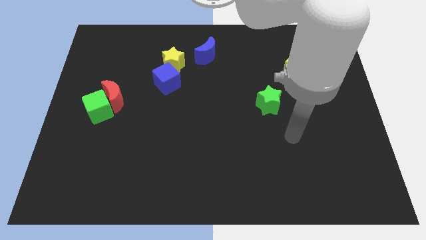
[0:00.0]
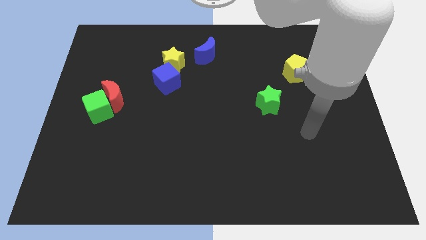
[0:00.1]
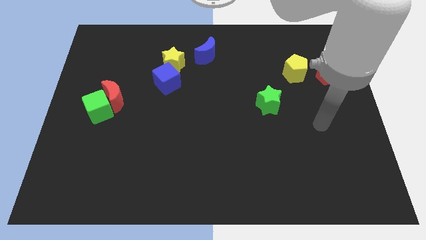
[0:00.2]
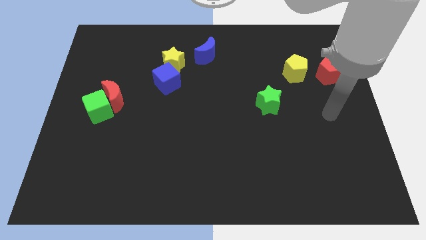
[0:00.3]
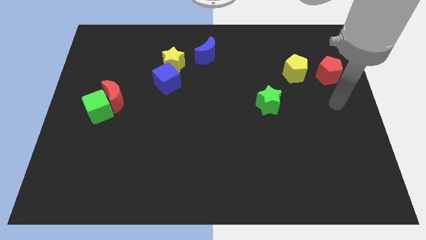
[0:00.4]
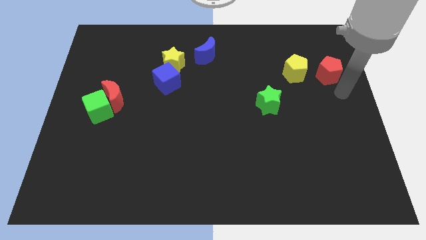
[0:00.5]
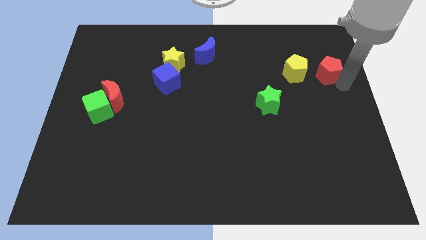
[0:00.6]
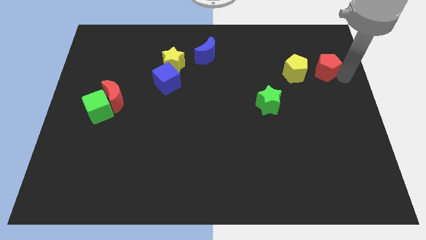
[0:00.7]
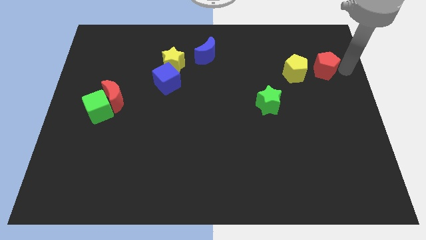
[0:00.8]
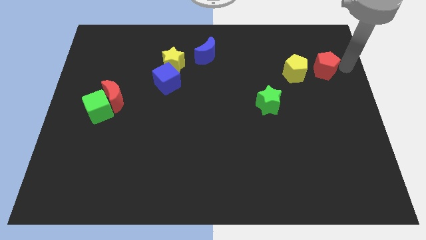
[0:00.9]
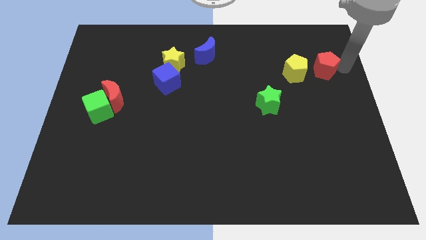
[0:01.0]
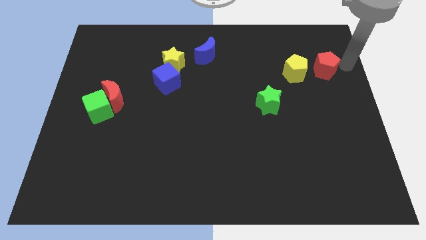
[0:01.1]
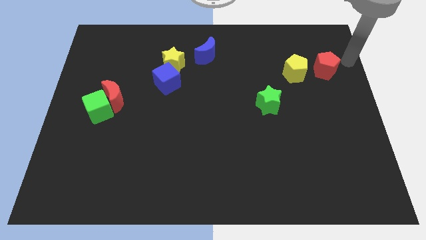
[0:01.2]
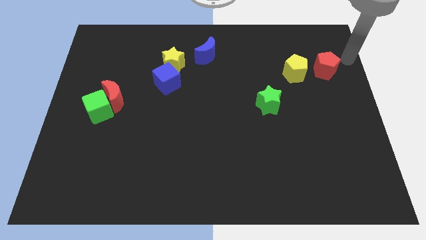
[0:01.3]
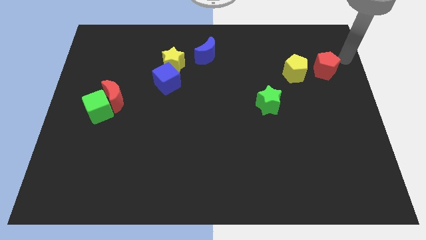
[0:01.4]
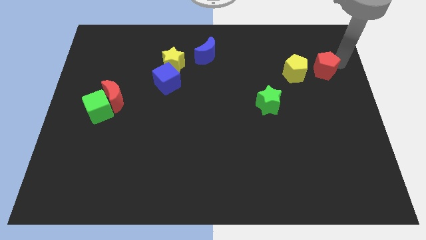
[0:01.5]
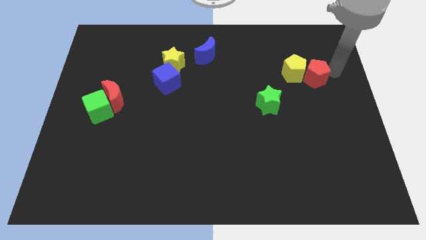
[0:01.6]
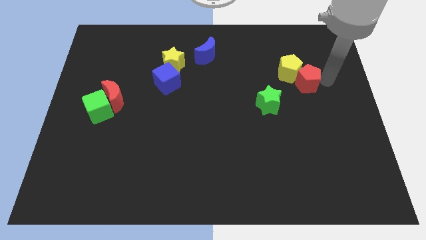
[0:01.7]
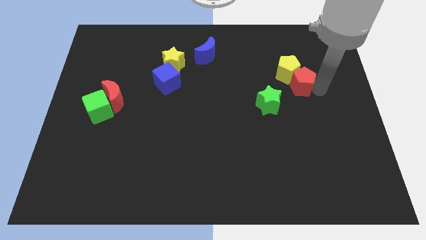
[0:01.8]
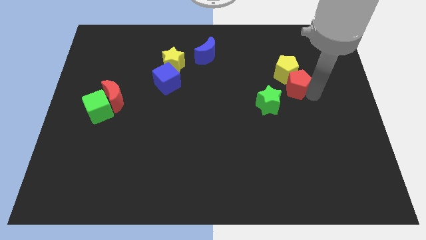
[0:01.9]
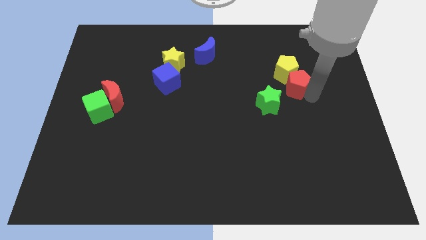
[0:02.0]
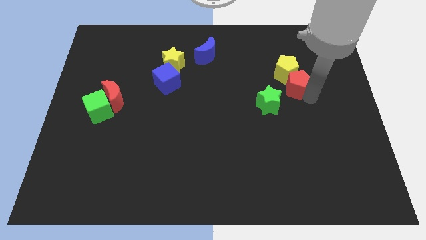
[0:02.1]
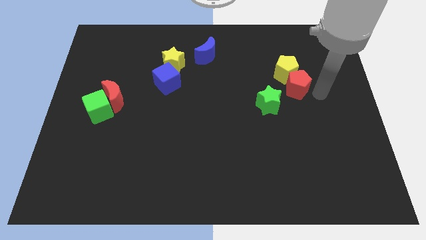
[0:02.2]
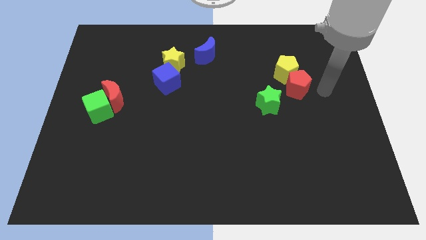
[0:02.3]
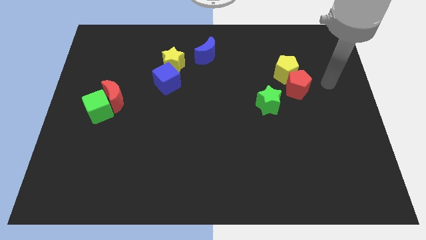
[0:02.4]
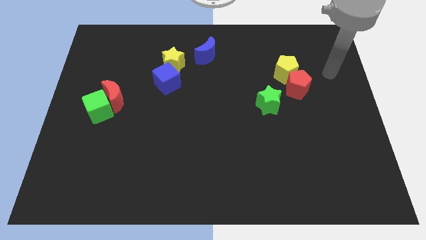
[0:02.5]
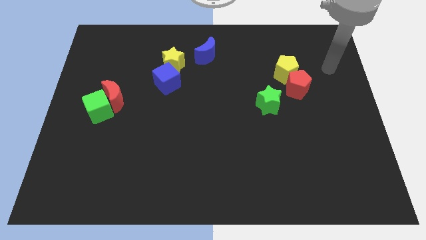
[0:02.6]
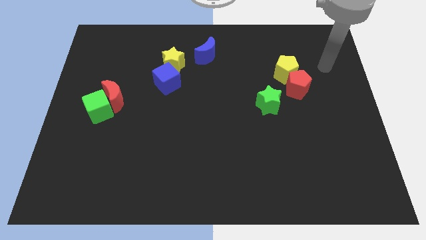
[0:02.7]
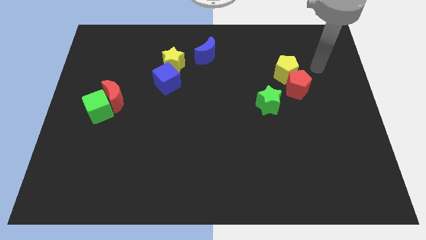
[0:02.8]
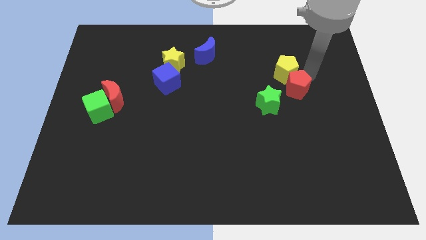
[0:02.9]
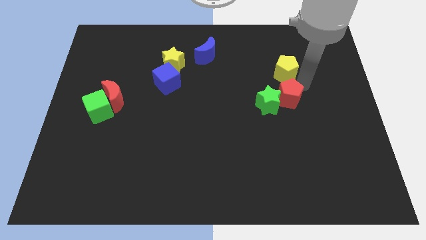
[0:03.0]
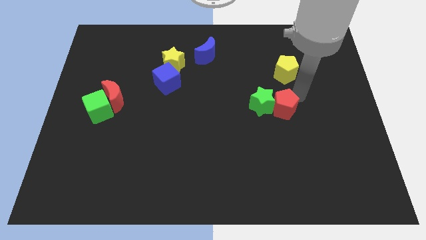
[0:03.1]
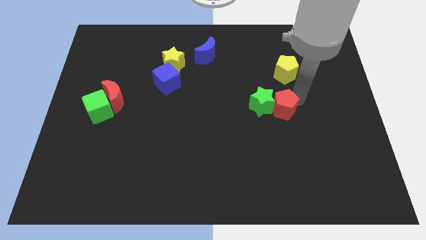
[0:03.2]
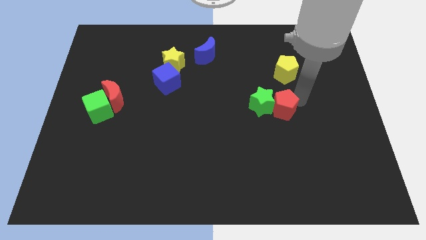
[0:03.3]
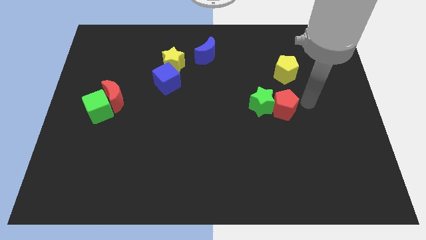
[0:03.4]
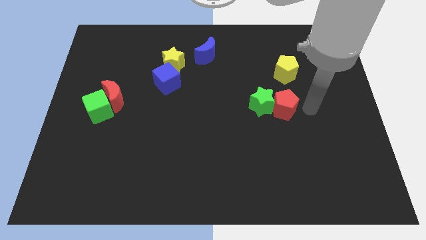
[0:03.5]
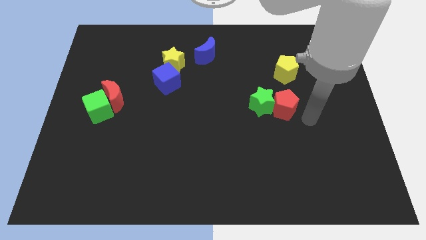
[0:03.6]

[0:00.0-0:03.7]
place the red pentagon right to the green star

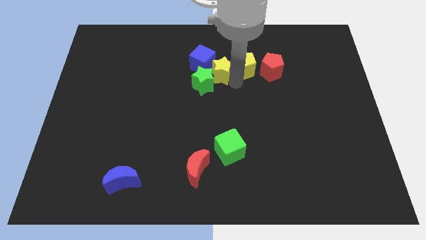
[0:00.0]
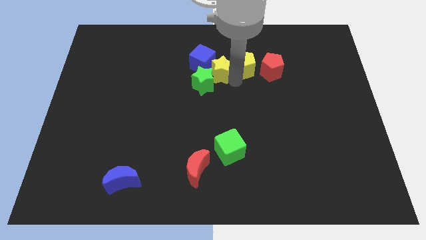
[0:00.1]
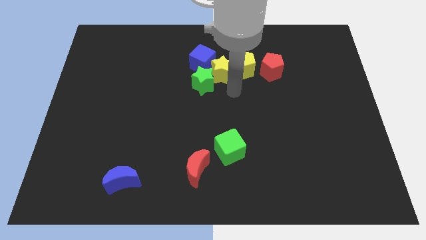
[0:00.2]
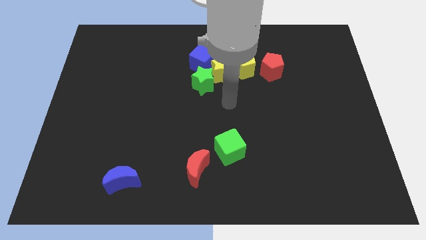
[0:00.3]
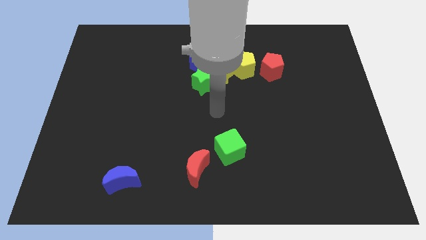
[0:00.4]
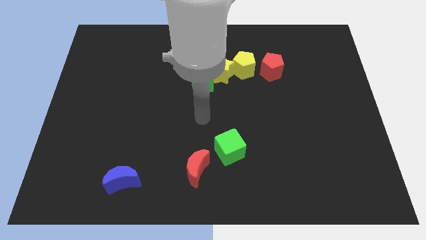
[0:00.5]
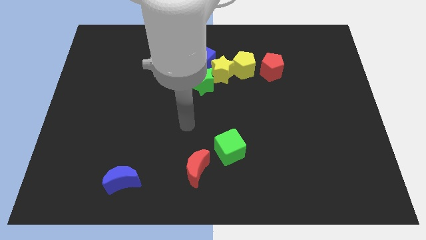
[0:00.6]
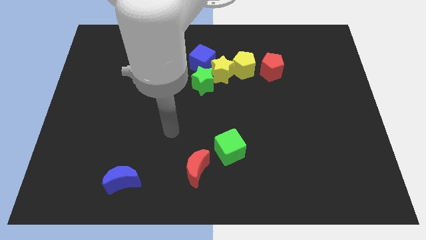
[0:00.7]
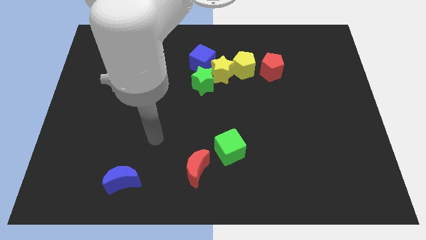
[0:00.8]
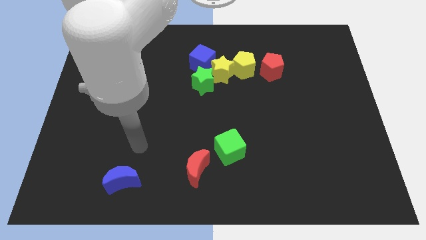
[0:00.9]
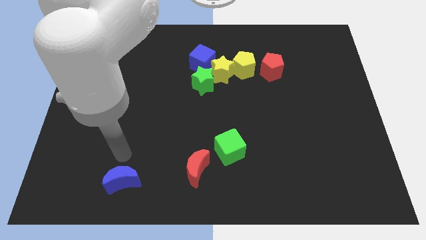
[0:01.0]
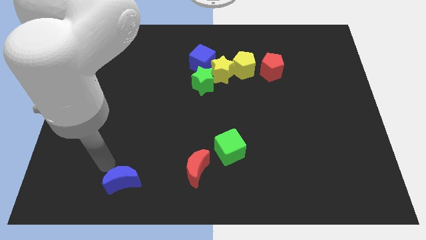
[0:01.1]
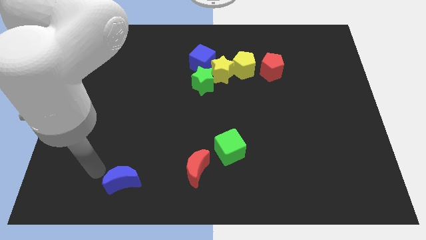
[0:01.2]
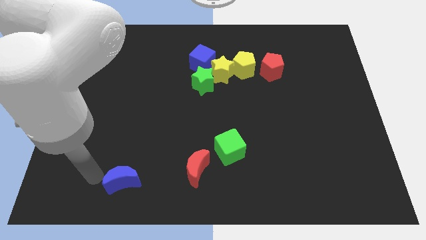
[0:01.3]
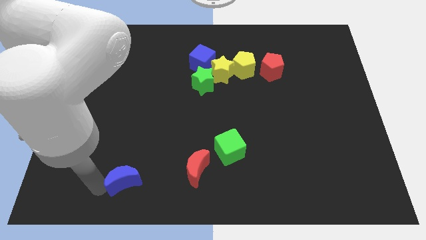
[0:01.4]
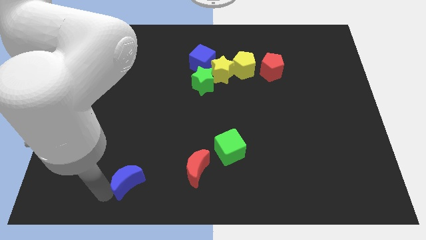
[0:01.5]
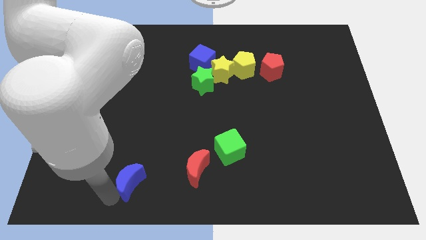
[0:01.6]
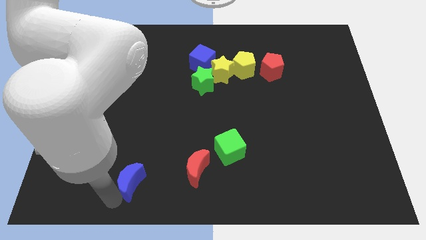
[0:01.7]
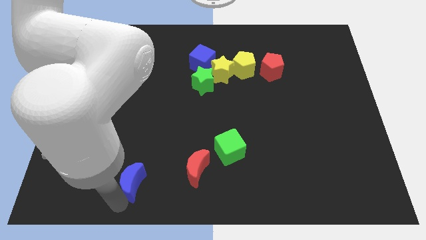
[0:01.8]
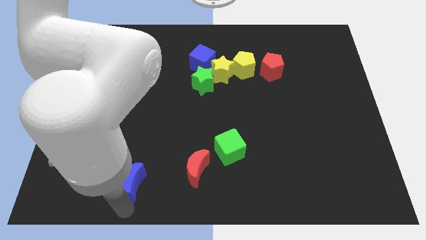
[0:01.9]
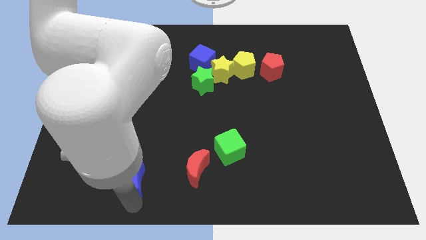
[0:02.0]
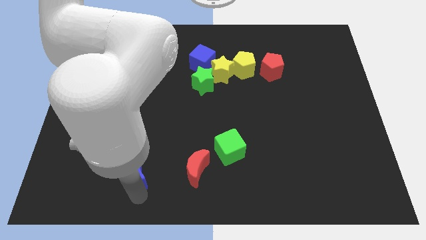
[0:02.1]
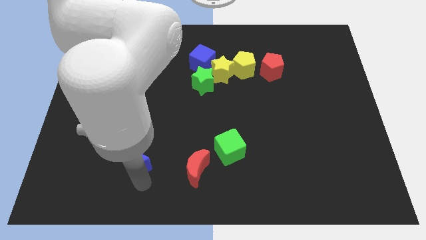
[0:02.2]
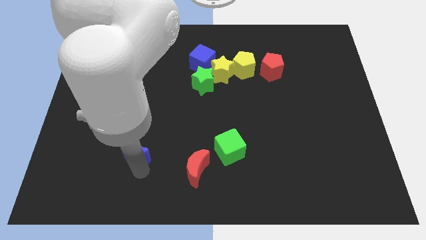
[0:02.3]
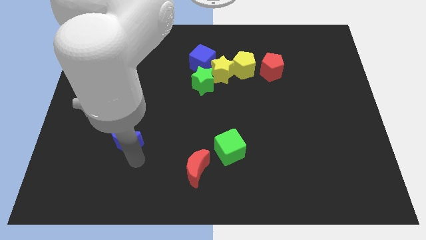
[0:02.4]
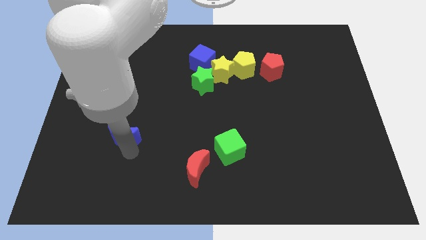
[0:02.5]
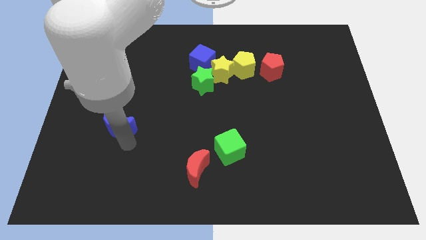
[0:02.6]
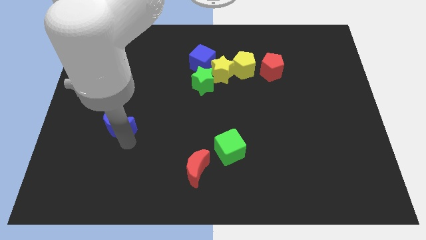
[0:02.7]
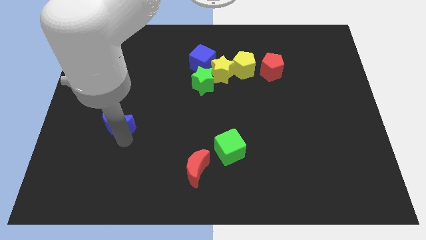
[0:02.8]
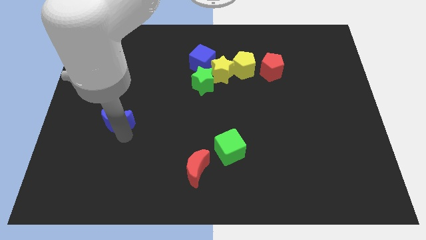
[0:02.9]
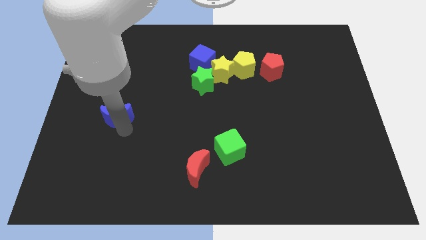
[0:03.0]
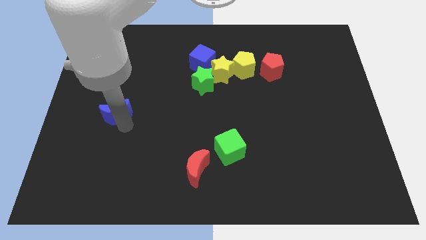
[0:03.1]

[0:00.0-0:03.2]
push the blue crescent slightly to the top

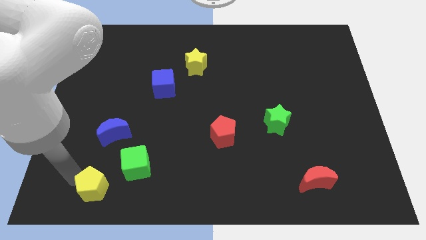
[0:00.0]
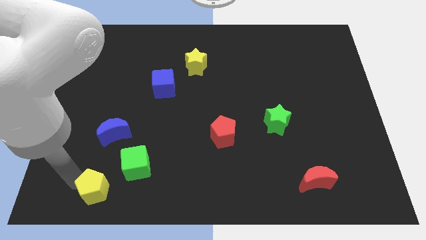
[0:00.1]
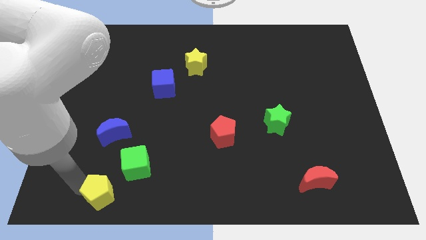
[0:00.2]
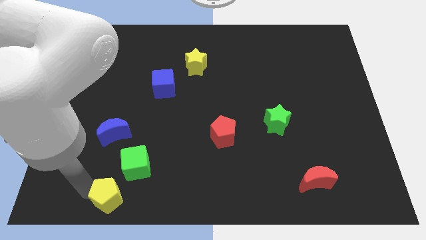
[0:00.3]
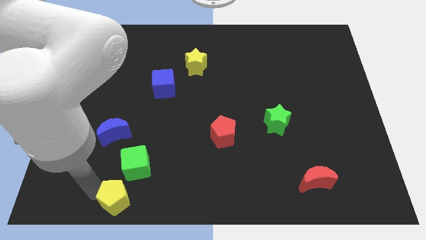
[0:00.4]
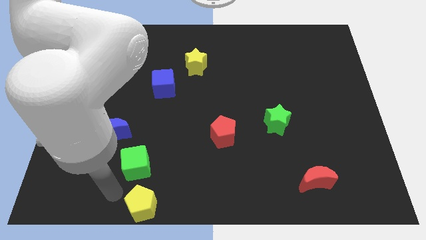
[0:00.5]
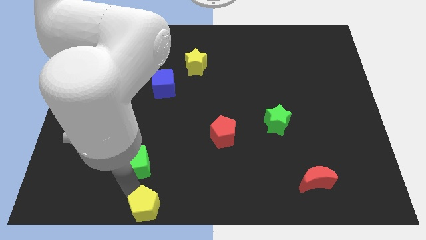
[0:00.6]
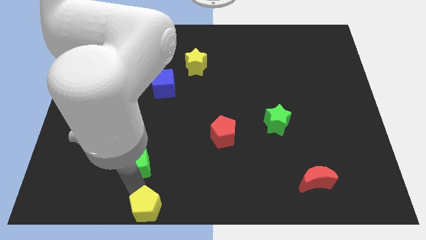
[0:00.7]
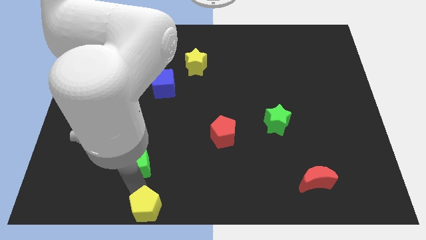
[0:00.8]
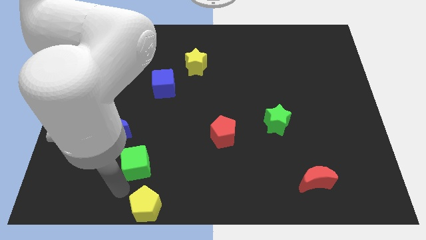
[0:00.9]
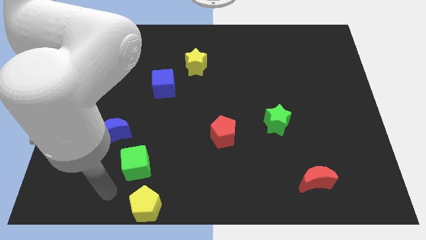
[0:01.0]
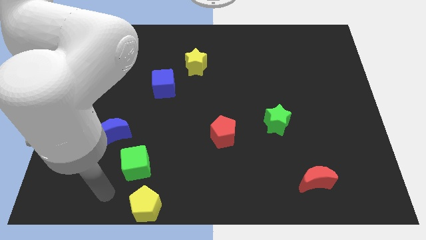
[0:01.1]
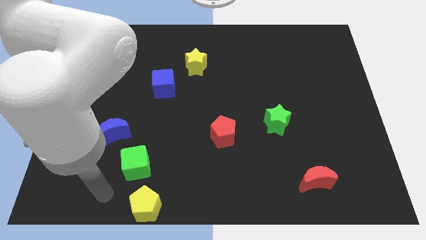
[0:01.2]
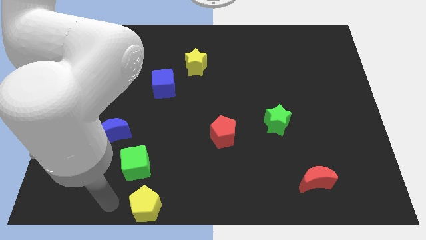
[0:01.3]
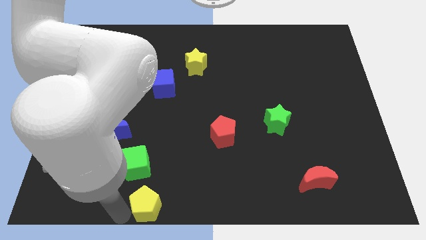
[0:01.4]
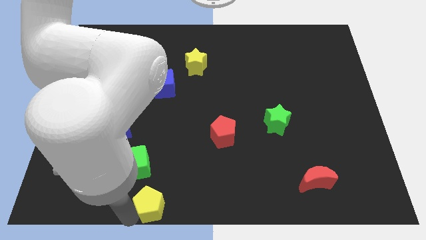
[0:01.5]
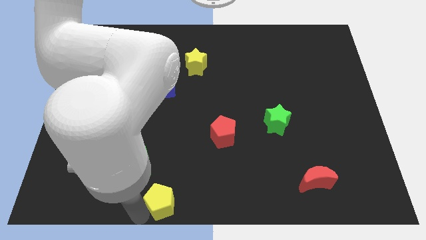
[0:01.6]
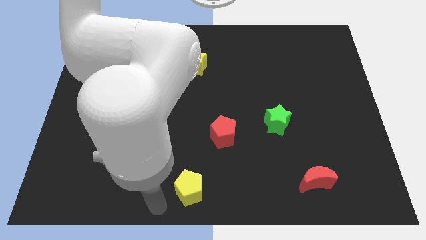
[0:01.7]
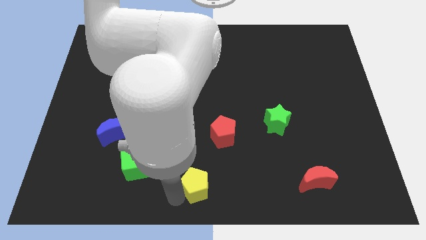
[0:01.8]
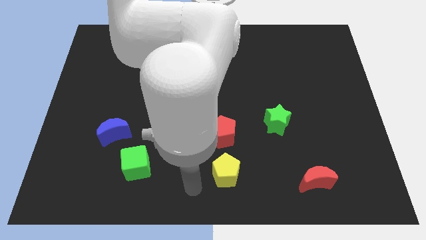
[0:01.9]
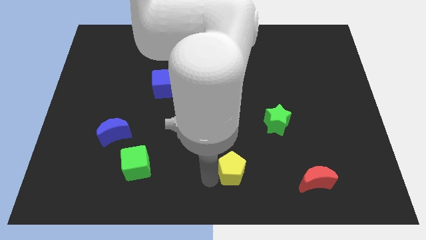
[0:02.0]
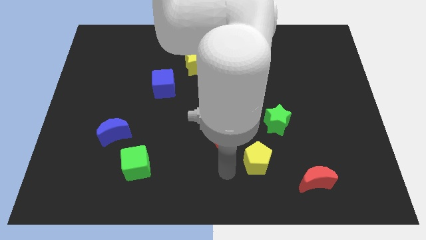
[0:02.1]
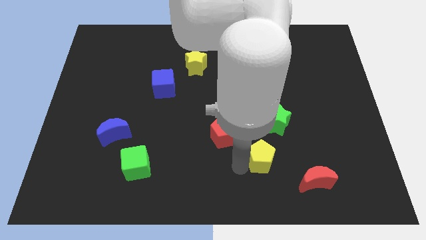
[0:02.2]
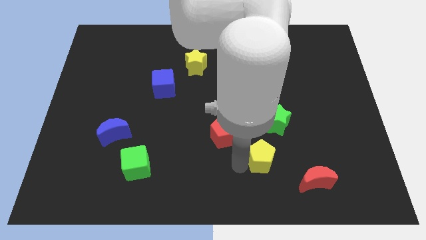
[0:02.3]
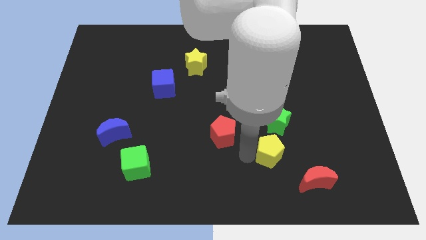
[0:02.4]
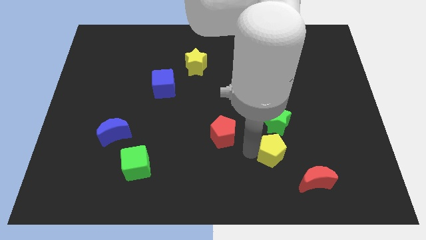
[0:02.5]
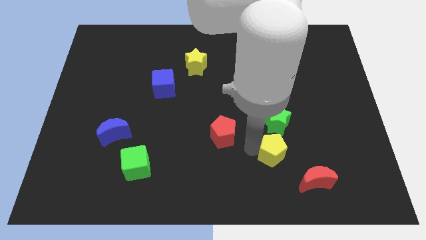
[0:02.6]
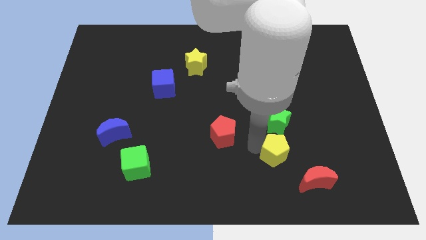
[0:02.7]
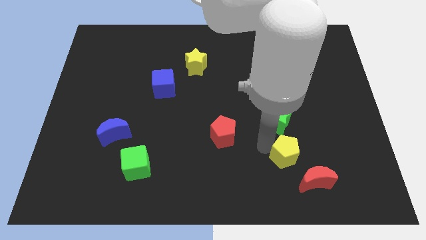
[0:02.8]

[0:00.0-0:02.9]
move yellow pentagon to the bottom of green star
